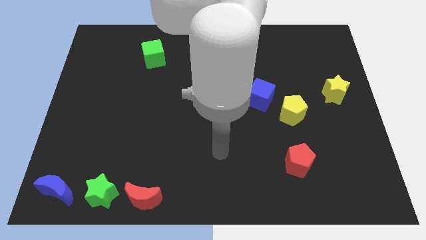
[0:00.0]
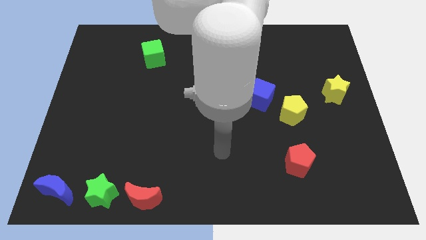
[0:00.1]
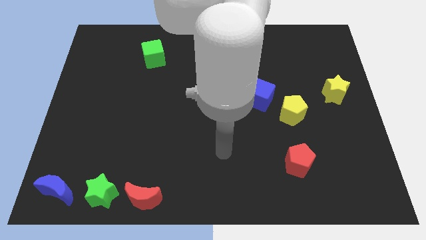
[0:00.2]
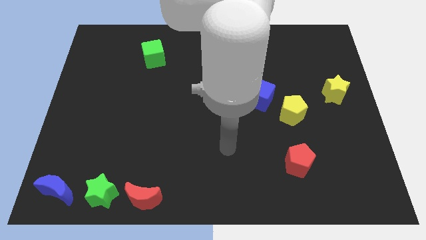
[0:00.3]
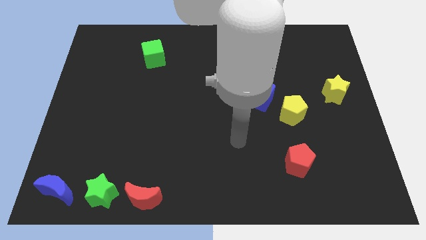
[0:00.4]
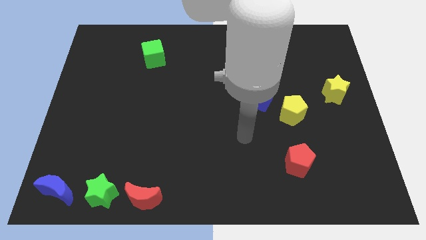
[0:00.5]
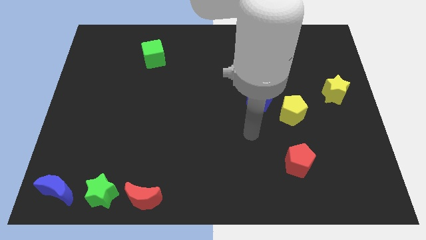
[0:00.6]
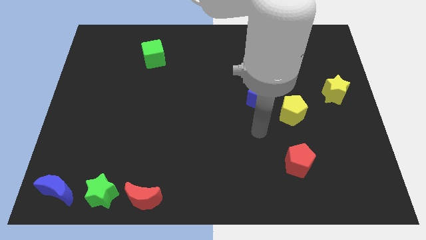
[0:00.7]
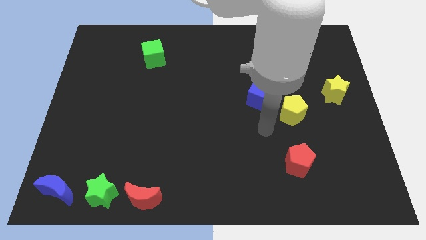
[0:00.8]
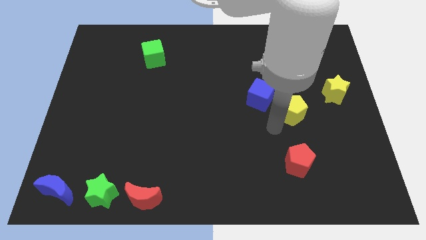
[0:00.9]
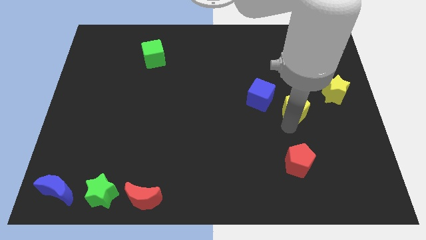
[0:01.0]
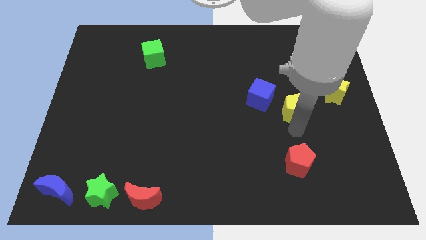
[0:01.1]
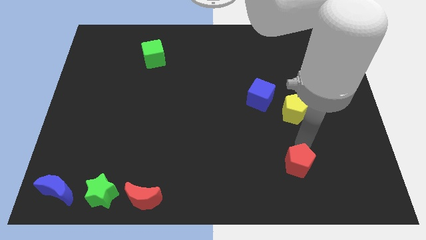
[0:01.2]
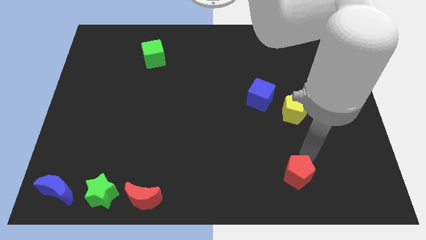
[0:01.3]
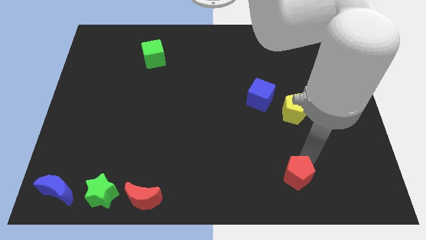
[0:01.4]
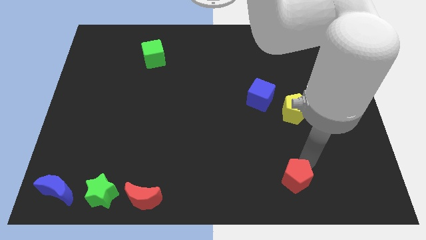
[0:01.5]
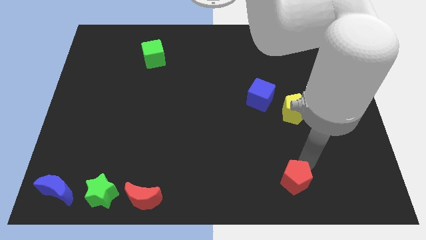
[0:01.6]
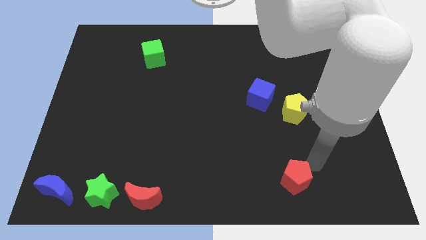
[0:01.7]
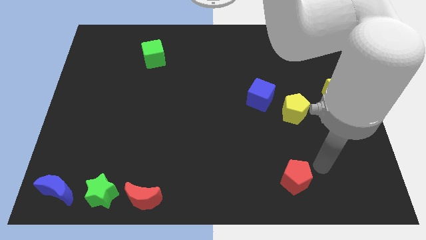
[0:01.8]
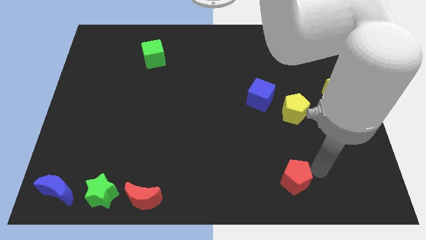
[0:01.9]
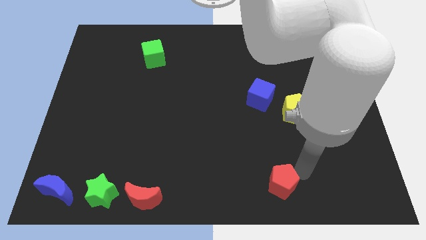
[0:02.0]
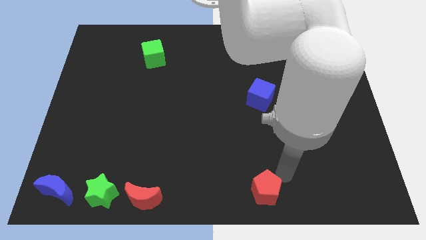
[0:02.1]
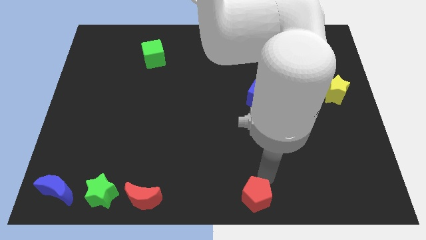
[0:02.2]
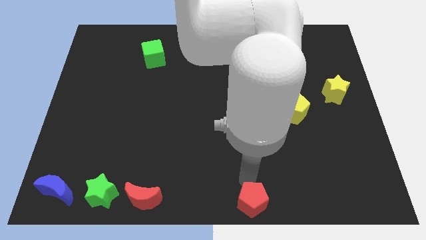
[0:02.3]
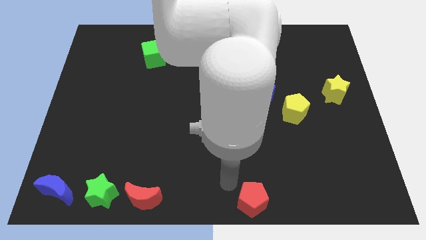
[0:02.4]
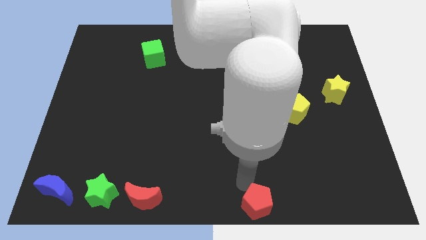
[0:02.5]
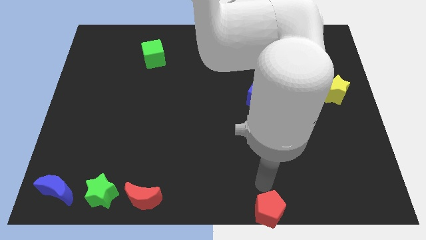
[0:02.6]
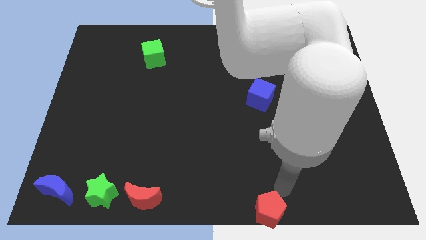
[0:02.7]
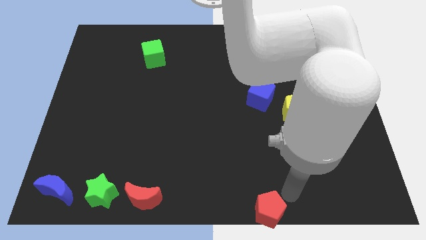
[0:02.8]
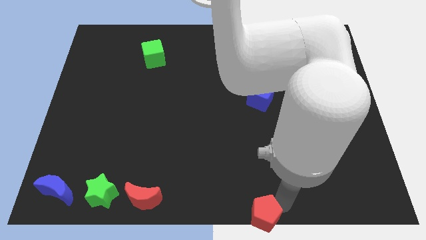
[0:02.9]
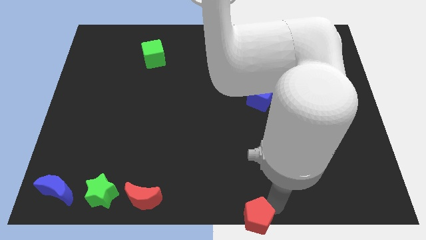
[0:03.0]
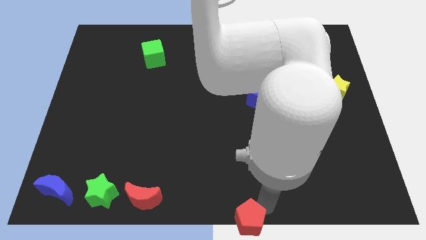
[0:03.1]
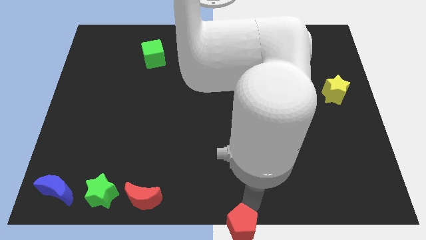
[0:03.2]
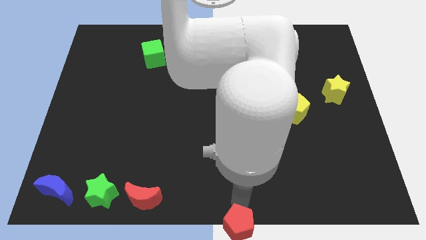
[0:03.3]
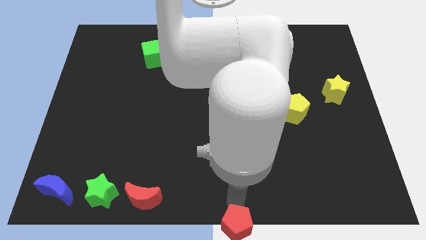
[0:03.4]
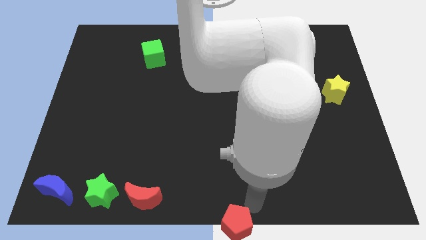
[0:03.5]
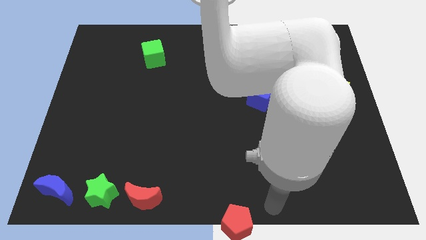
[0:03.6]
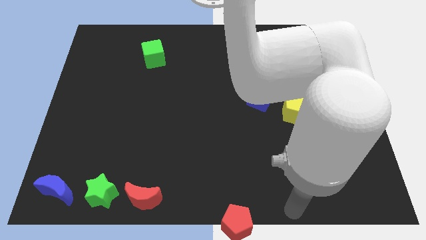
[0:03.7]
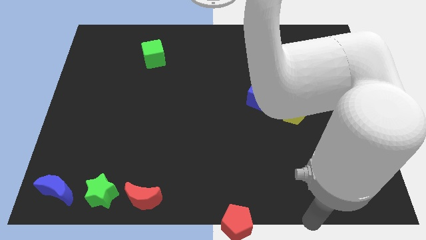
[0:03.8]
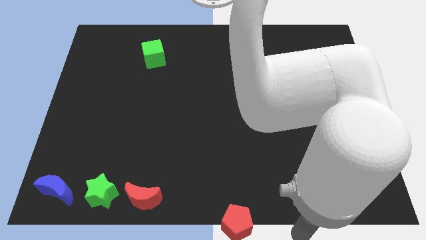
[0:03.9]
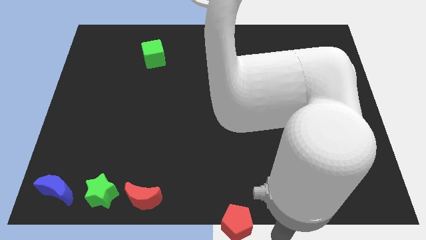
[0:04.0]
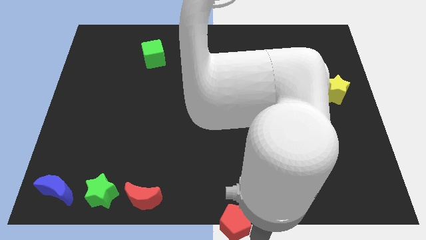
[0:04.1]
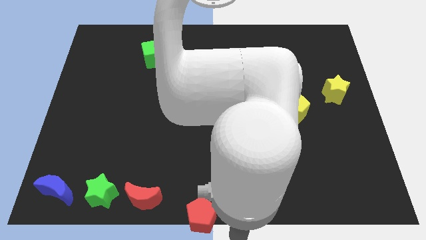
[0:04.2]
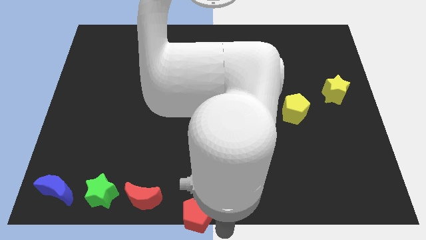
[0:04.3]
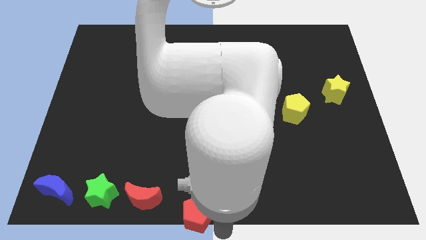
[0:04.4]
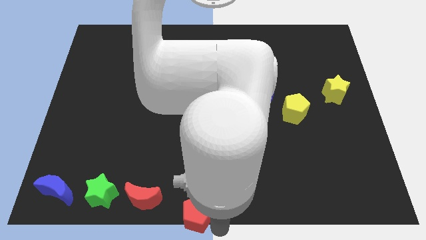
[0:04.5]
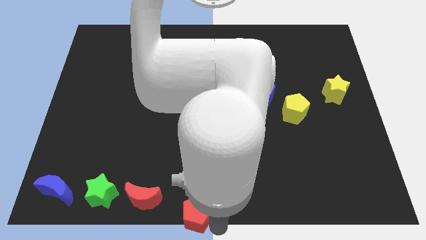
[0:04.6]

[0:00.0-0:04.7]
push the red pentagon towards the red moon

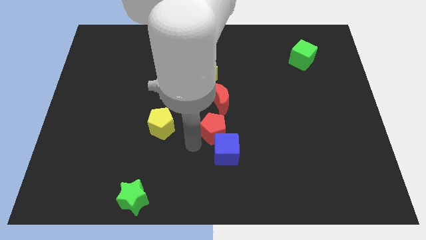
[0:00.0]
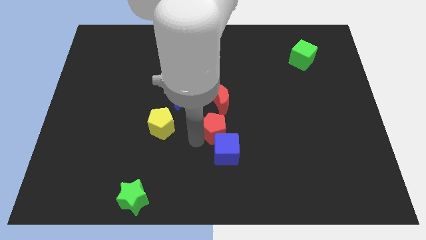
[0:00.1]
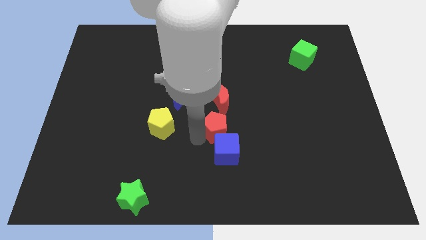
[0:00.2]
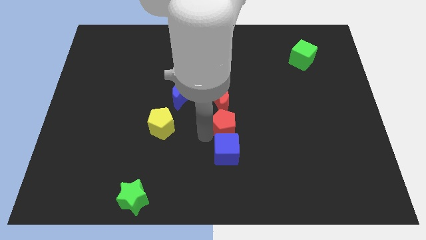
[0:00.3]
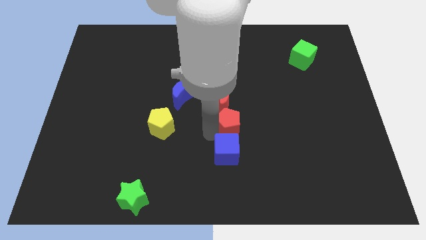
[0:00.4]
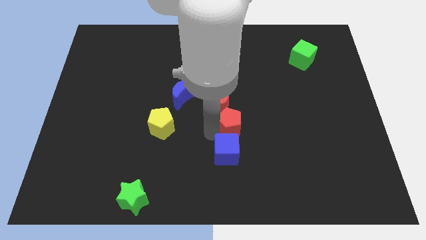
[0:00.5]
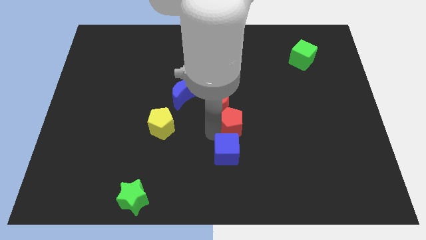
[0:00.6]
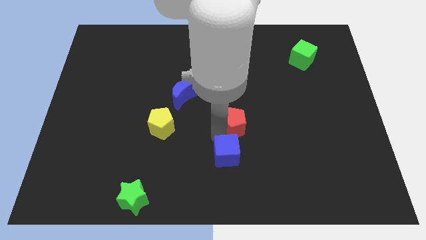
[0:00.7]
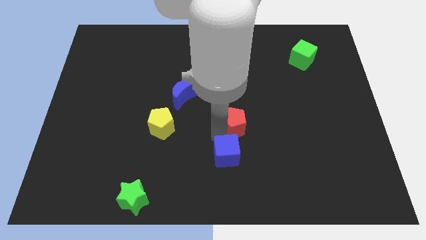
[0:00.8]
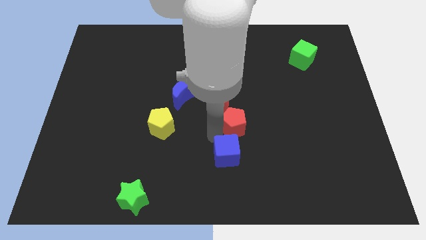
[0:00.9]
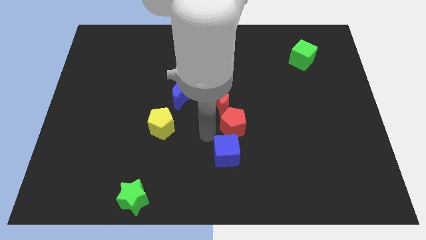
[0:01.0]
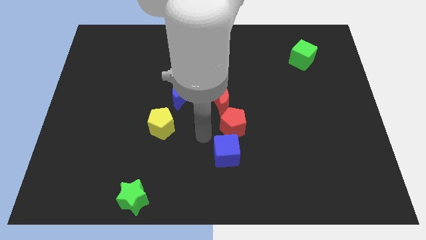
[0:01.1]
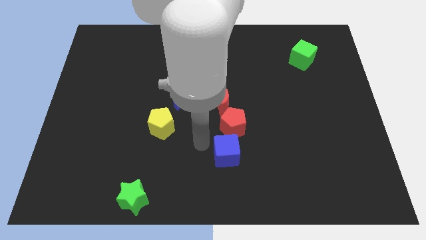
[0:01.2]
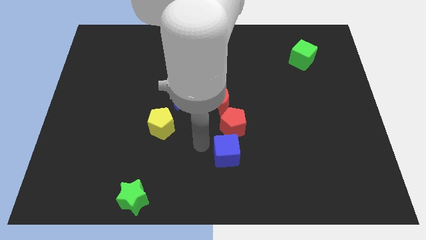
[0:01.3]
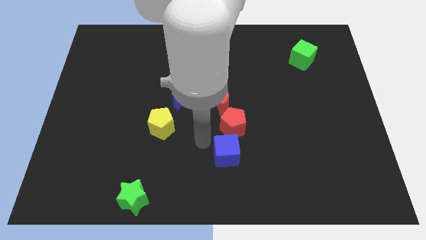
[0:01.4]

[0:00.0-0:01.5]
move red pentagon

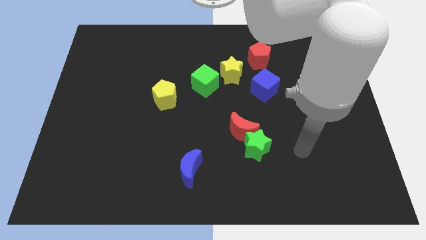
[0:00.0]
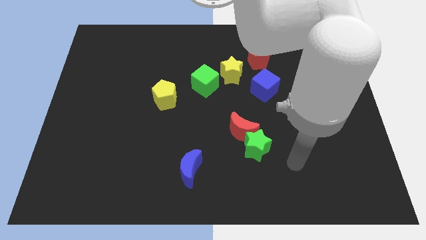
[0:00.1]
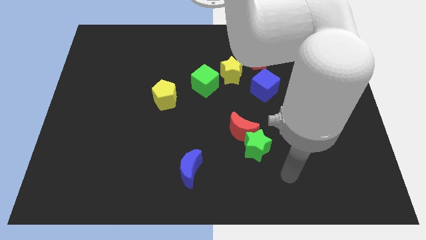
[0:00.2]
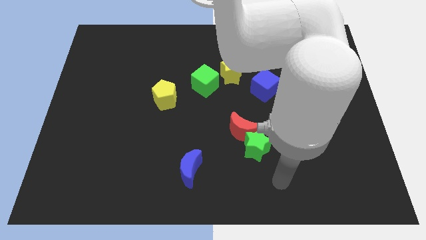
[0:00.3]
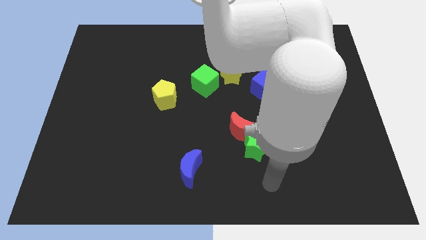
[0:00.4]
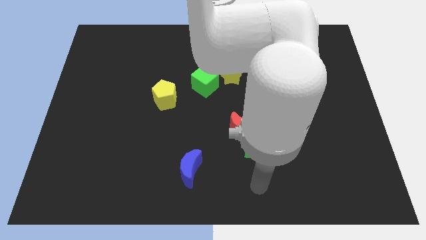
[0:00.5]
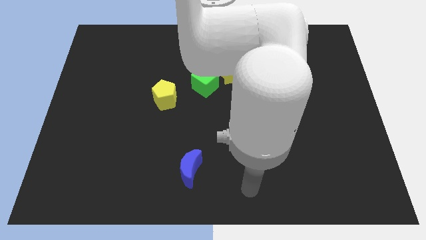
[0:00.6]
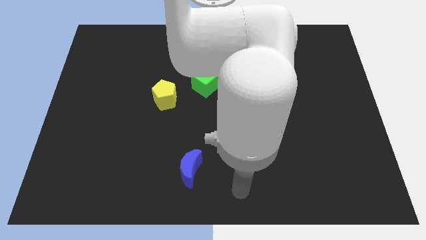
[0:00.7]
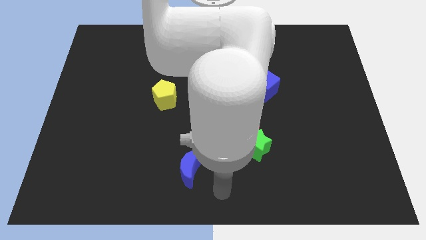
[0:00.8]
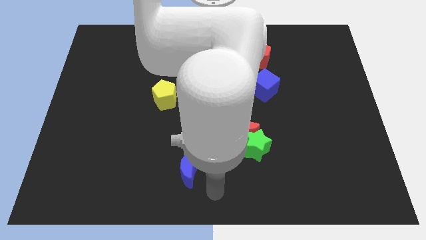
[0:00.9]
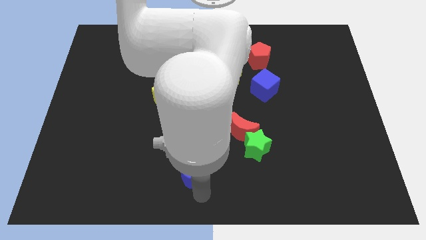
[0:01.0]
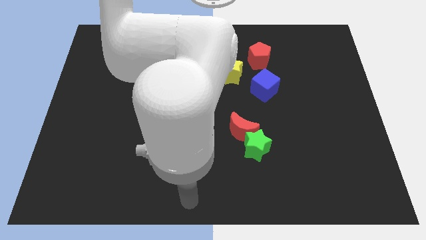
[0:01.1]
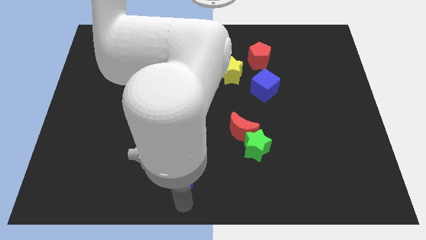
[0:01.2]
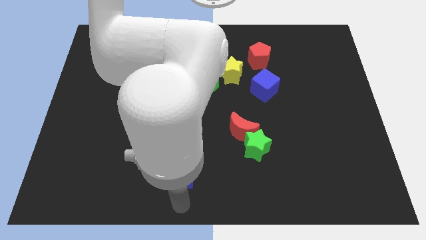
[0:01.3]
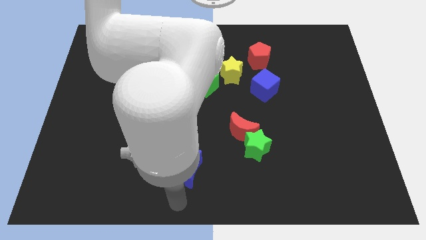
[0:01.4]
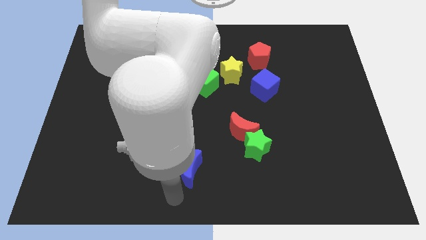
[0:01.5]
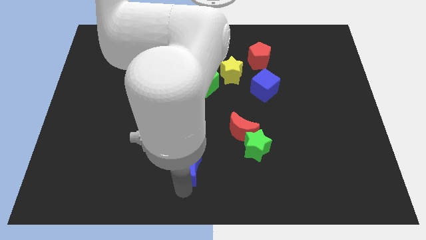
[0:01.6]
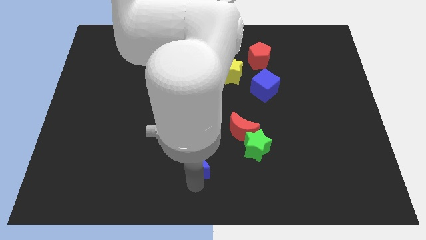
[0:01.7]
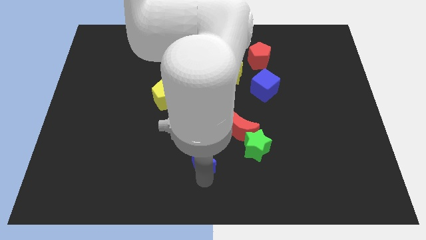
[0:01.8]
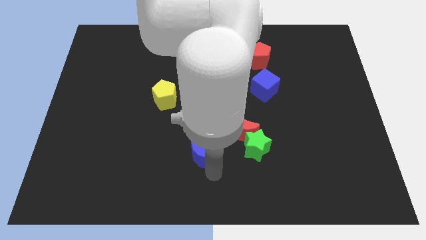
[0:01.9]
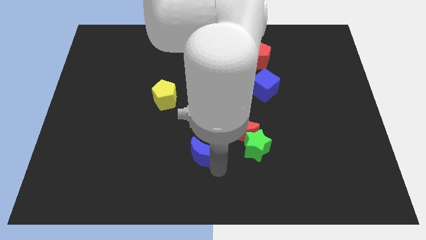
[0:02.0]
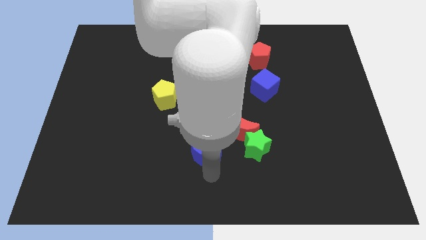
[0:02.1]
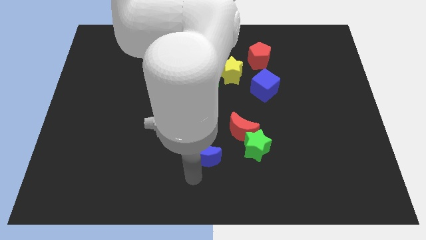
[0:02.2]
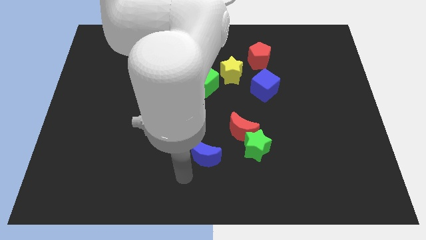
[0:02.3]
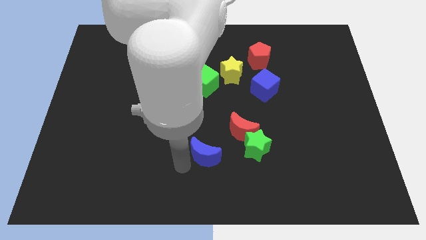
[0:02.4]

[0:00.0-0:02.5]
move the blue moon slightly up

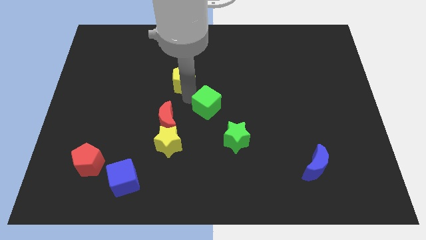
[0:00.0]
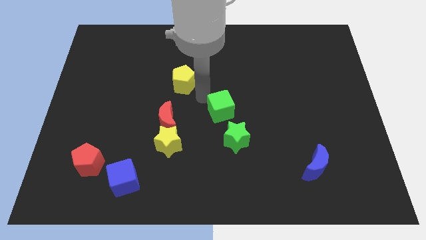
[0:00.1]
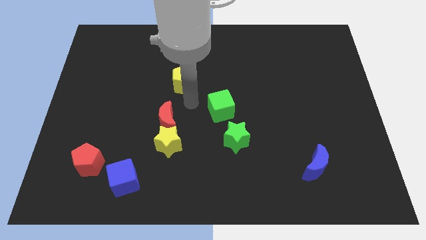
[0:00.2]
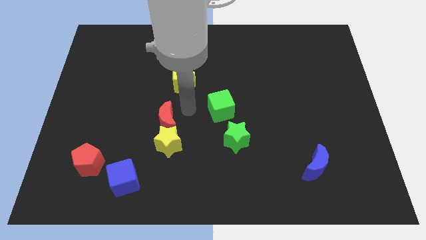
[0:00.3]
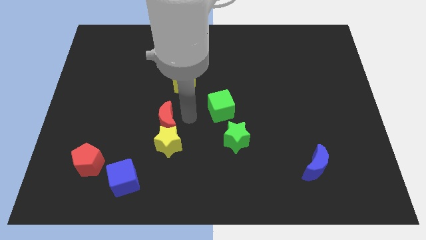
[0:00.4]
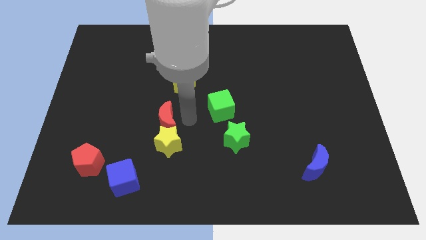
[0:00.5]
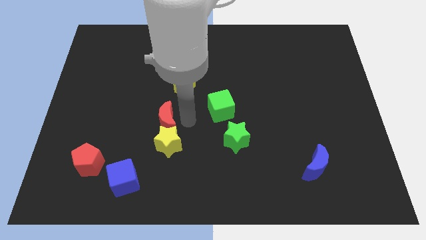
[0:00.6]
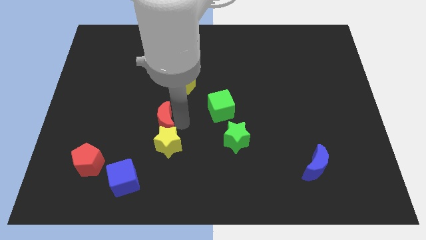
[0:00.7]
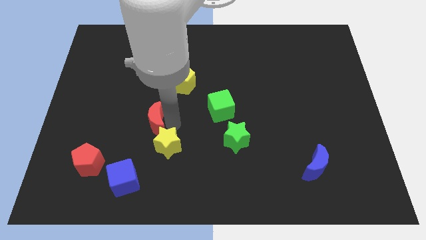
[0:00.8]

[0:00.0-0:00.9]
move your arm to the right of red moon
